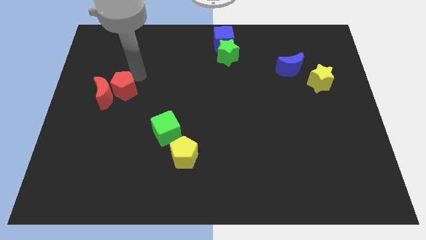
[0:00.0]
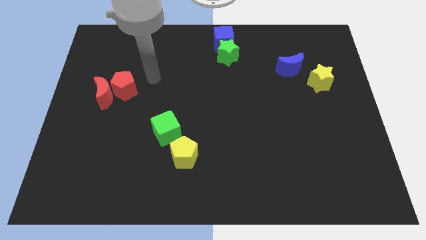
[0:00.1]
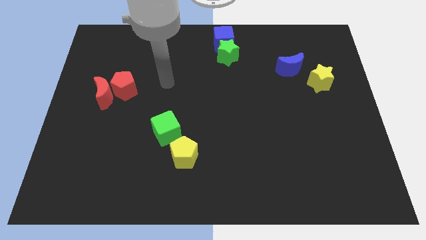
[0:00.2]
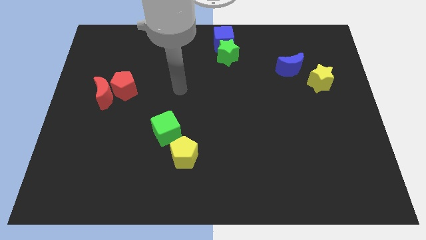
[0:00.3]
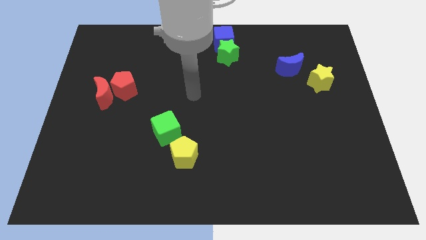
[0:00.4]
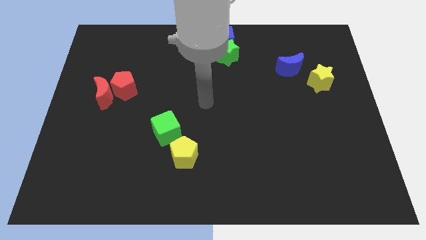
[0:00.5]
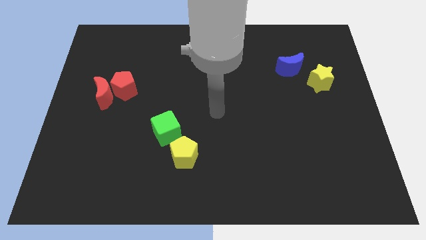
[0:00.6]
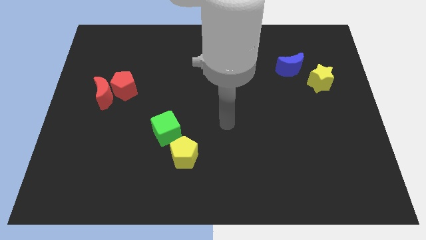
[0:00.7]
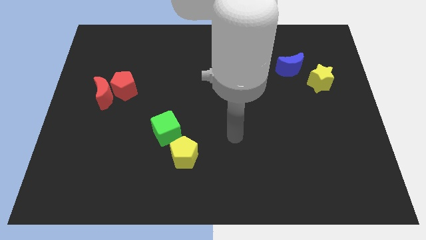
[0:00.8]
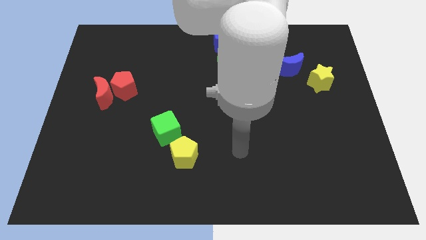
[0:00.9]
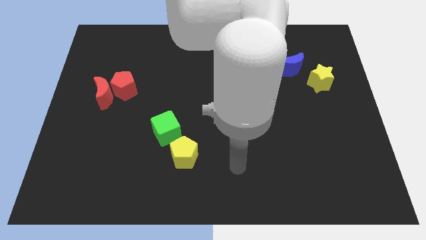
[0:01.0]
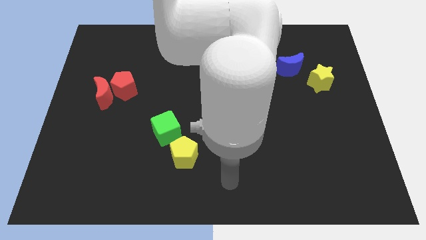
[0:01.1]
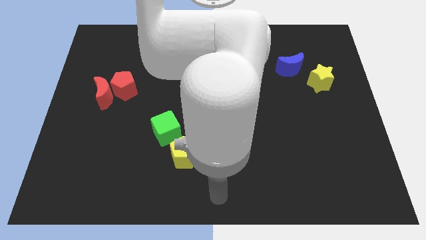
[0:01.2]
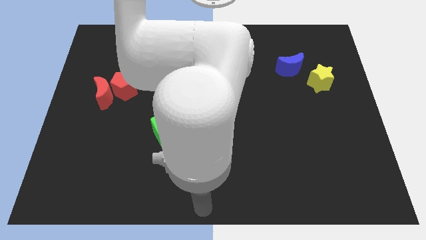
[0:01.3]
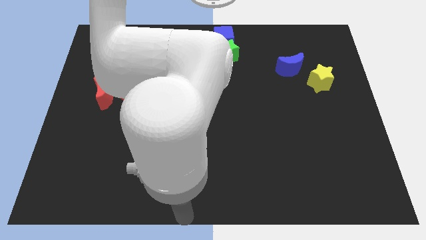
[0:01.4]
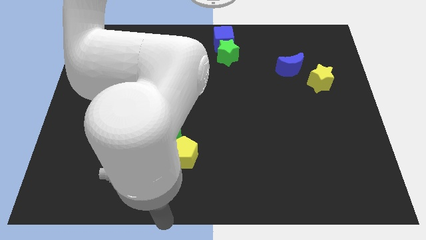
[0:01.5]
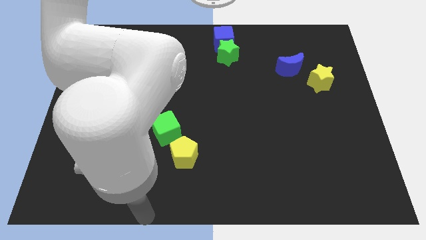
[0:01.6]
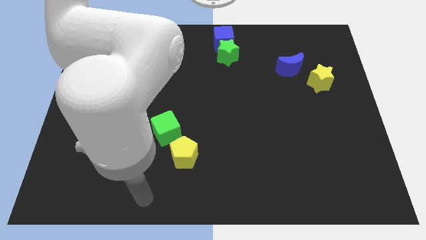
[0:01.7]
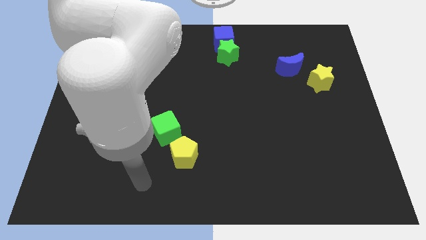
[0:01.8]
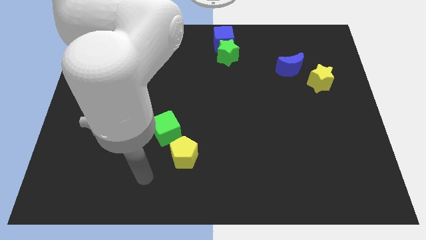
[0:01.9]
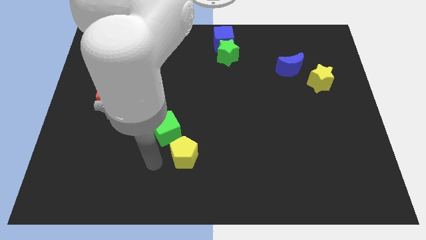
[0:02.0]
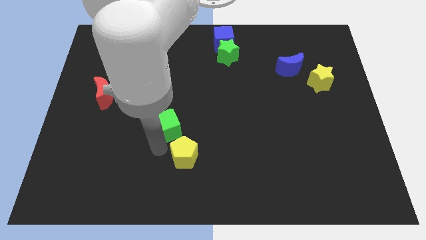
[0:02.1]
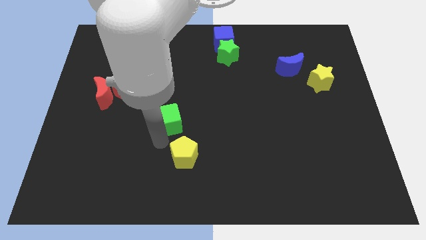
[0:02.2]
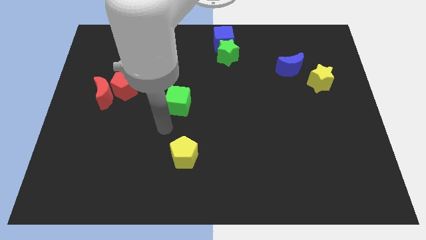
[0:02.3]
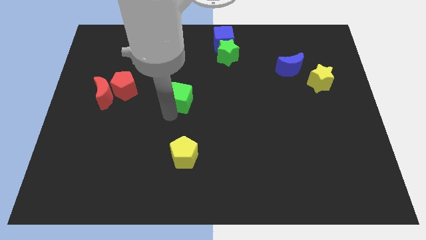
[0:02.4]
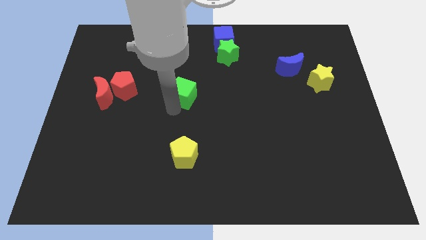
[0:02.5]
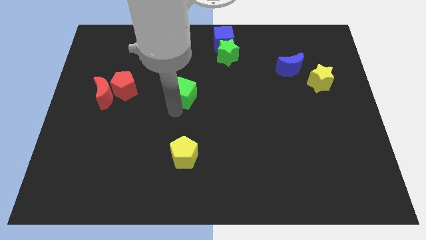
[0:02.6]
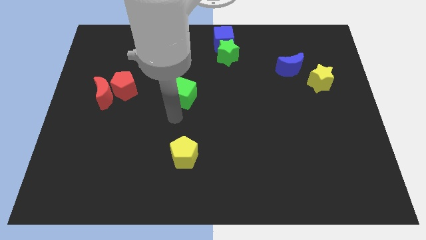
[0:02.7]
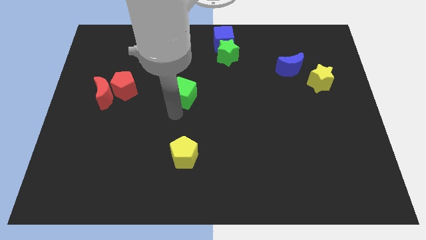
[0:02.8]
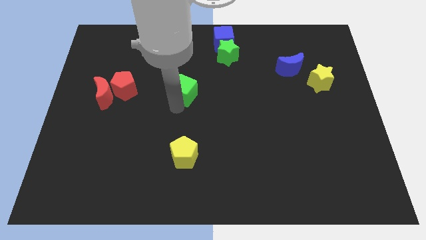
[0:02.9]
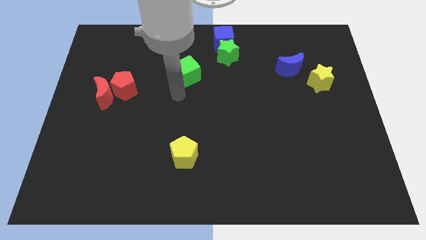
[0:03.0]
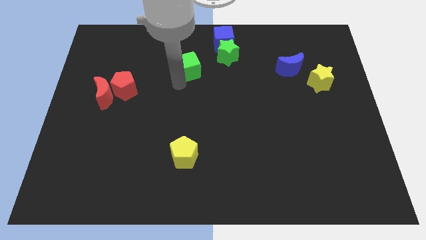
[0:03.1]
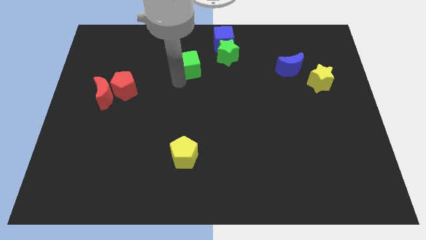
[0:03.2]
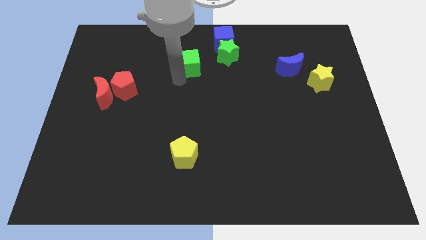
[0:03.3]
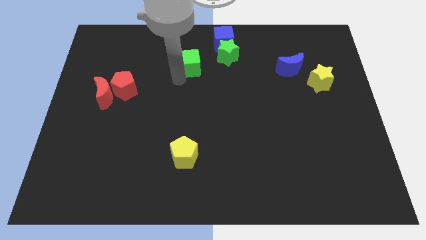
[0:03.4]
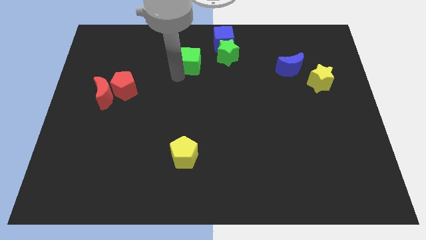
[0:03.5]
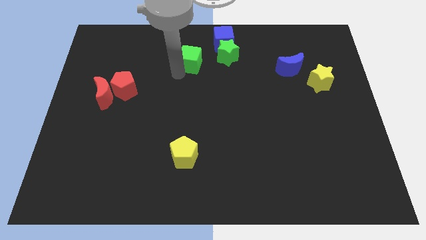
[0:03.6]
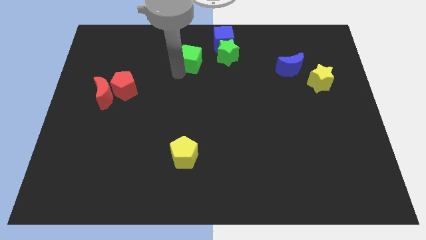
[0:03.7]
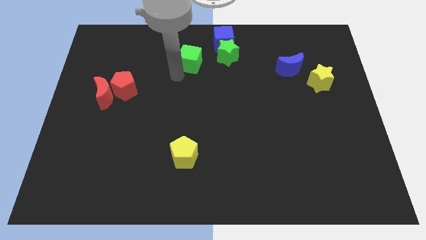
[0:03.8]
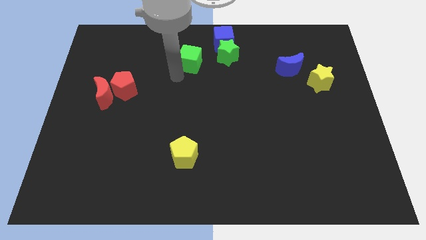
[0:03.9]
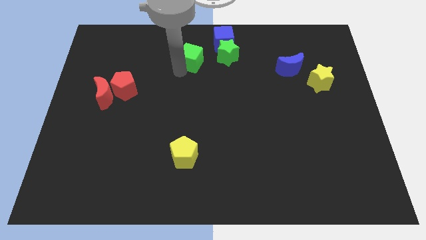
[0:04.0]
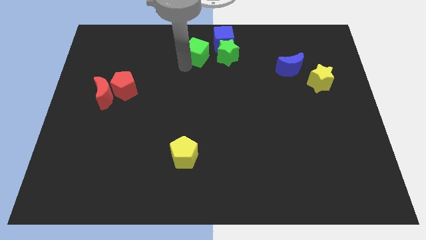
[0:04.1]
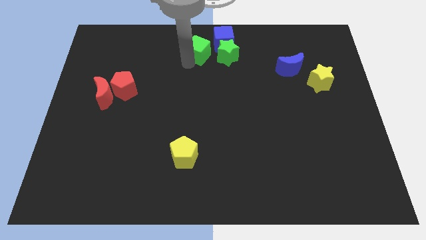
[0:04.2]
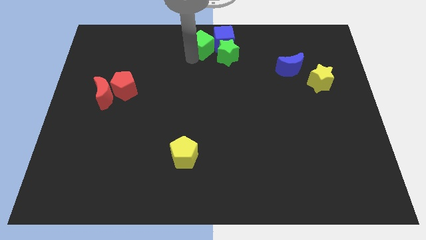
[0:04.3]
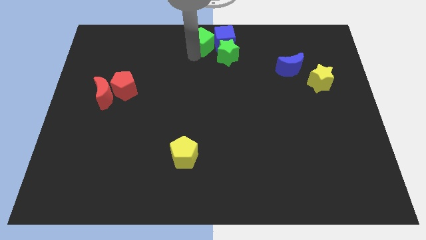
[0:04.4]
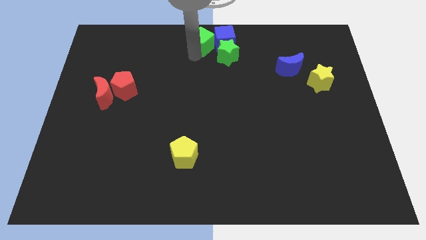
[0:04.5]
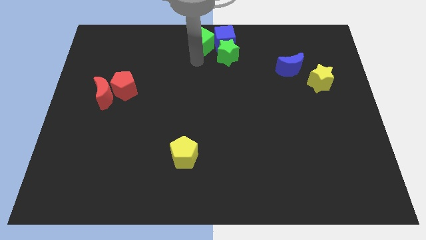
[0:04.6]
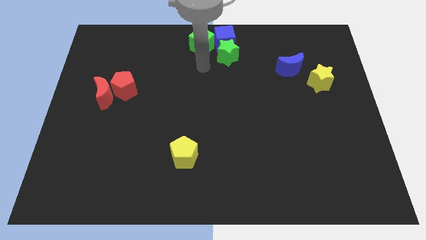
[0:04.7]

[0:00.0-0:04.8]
move the green cube to the left side of the blue cube

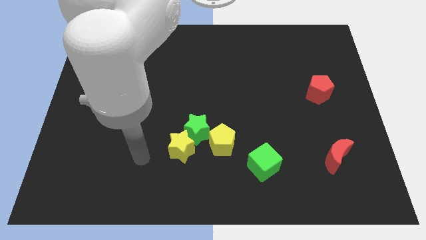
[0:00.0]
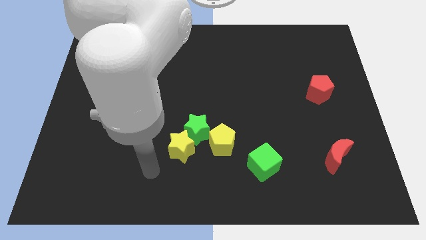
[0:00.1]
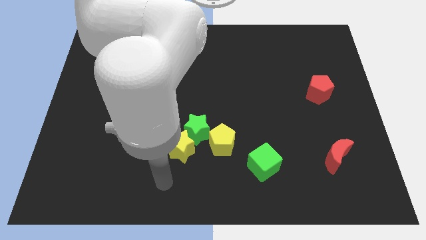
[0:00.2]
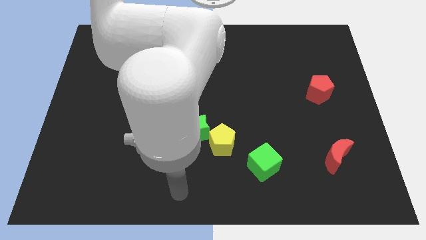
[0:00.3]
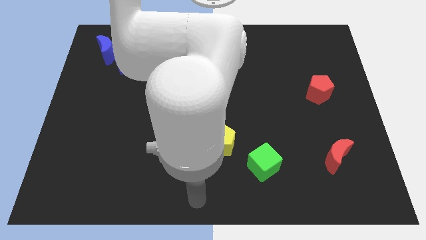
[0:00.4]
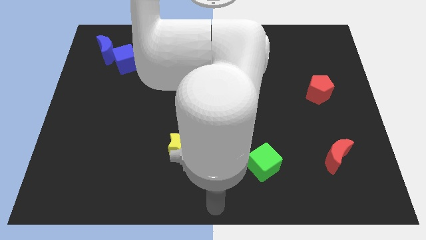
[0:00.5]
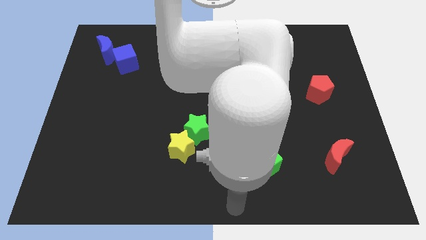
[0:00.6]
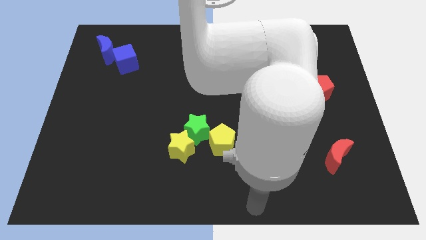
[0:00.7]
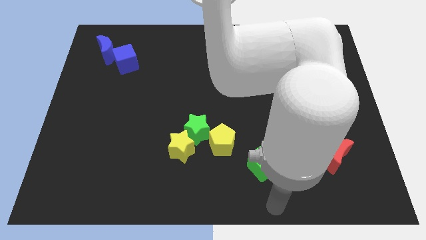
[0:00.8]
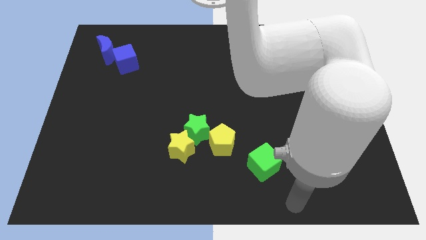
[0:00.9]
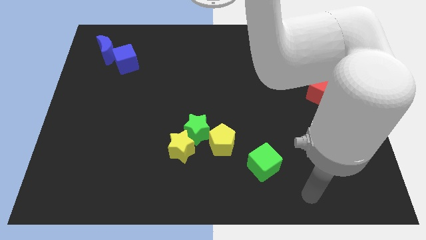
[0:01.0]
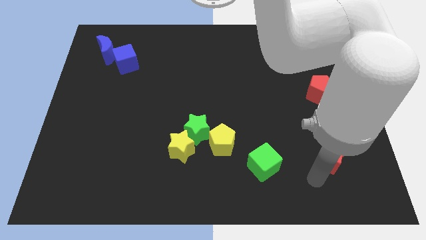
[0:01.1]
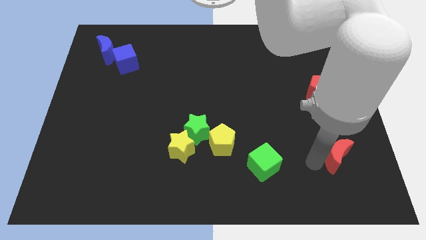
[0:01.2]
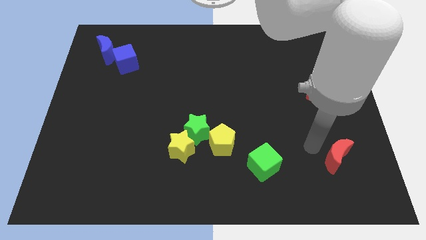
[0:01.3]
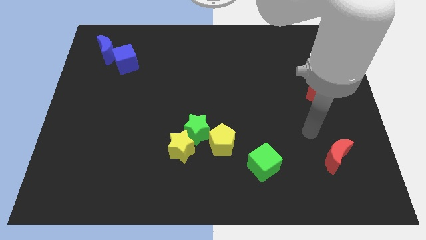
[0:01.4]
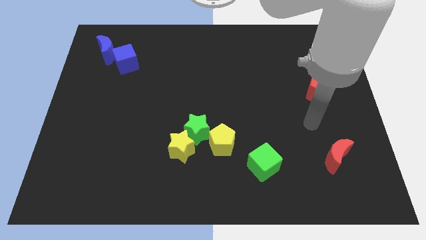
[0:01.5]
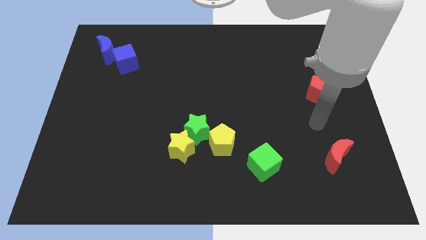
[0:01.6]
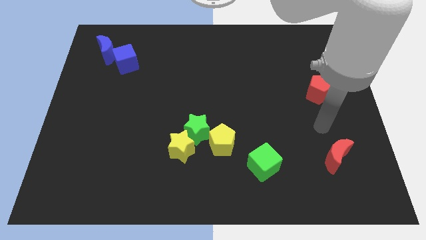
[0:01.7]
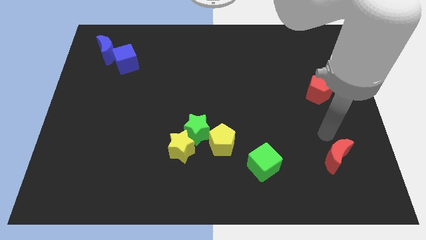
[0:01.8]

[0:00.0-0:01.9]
move your arm down and to the right

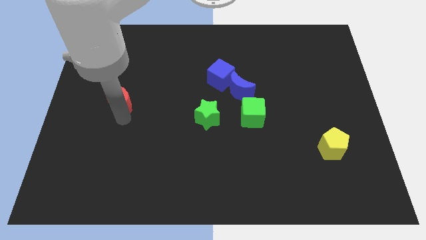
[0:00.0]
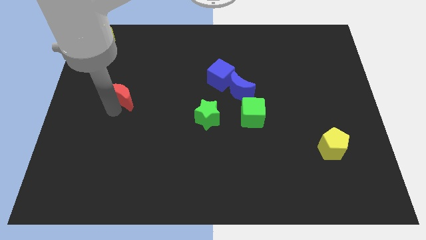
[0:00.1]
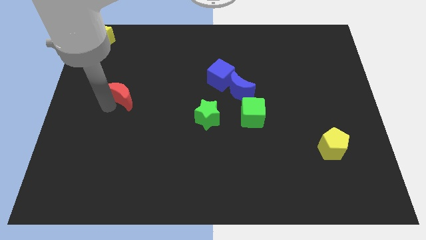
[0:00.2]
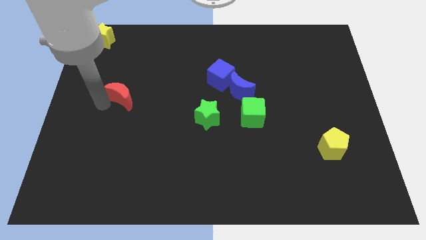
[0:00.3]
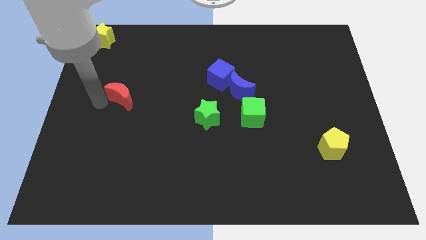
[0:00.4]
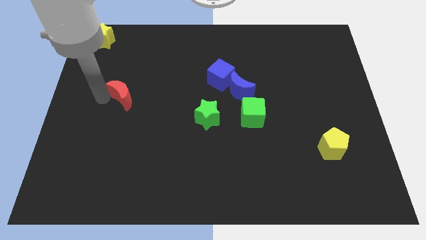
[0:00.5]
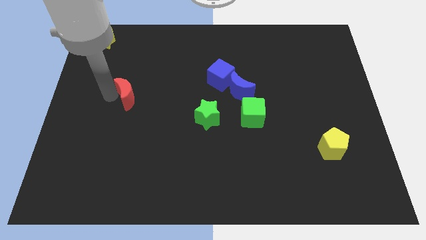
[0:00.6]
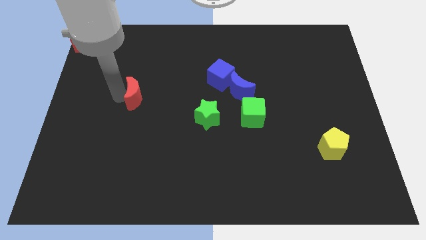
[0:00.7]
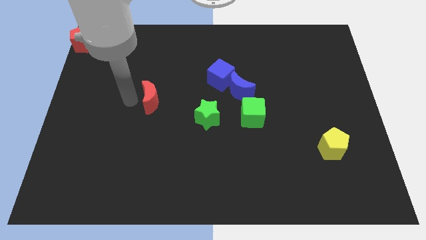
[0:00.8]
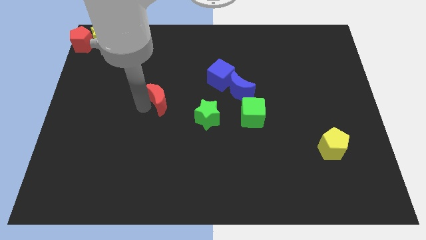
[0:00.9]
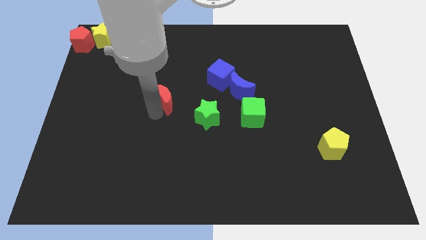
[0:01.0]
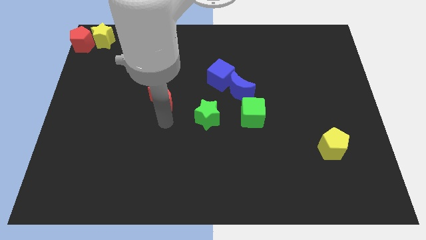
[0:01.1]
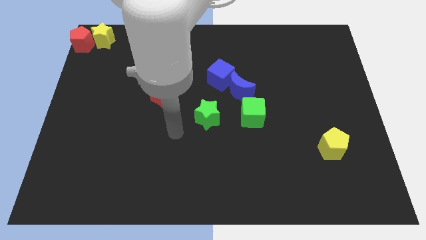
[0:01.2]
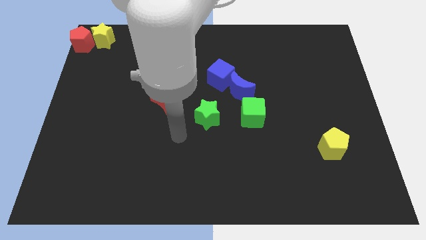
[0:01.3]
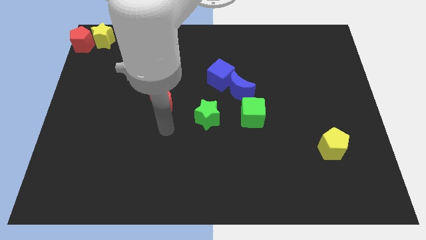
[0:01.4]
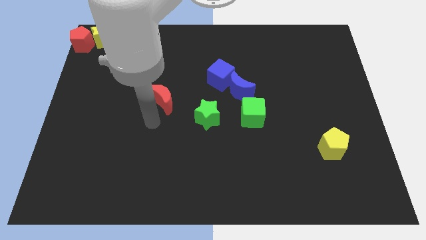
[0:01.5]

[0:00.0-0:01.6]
slide the red moon towards the center of the board

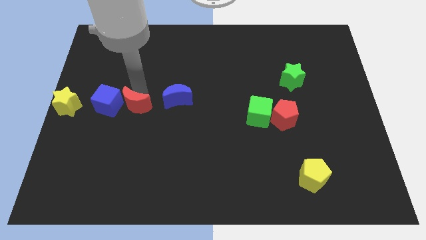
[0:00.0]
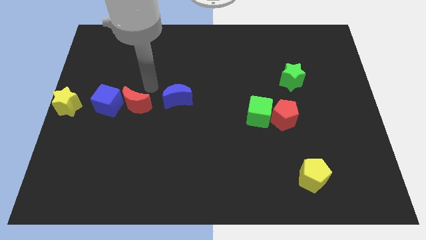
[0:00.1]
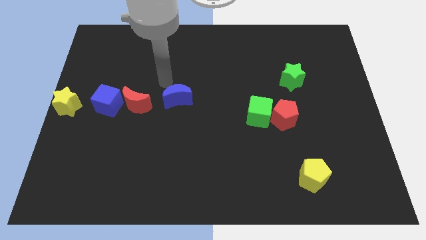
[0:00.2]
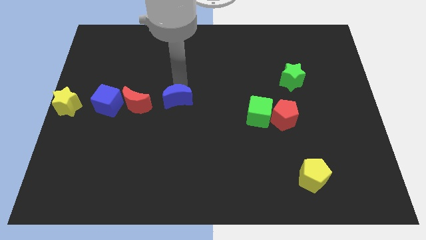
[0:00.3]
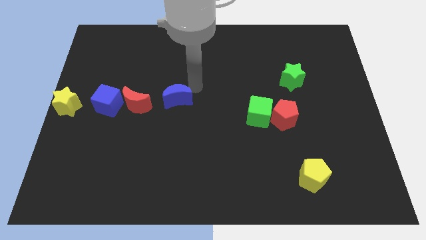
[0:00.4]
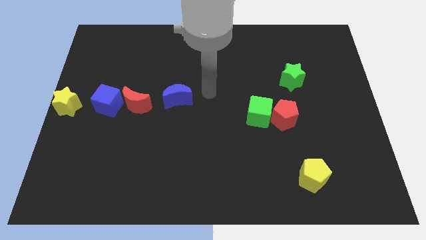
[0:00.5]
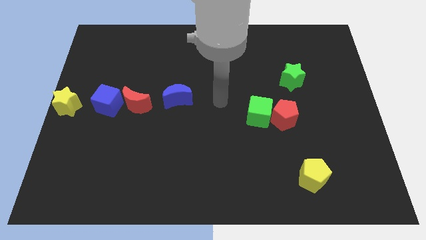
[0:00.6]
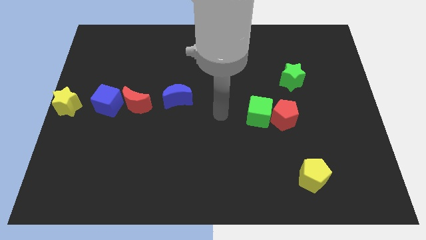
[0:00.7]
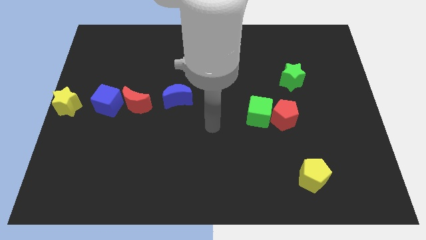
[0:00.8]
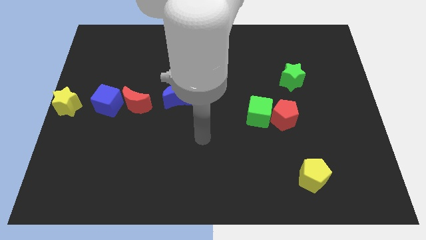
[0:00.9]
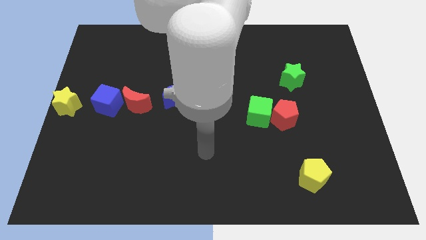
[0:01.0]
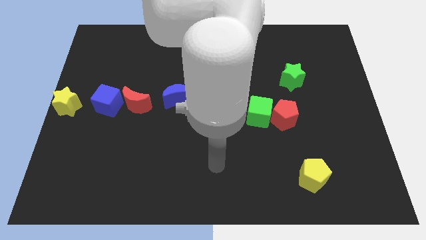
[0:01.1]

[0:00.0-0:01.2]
move your arm towards the bottom center of the board
